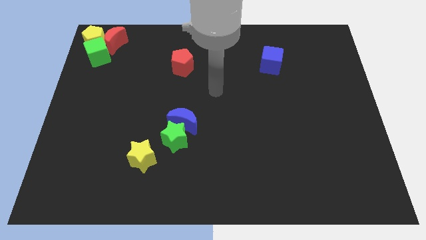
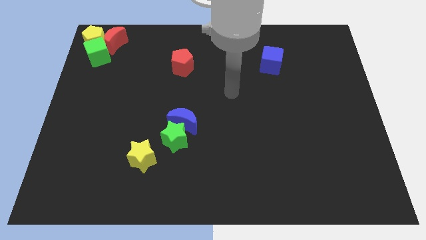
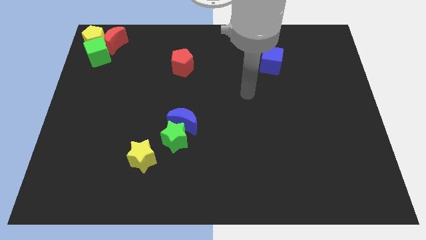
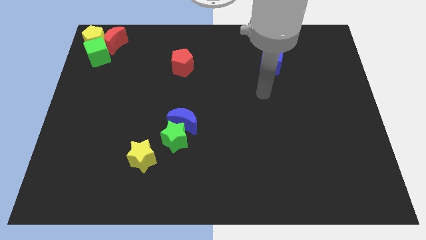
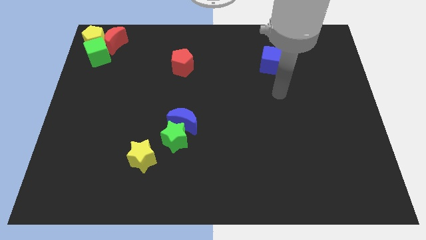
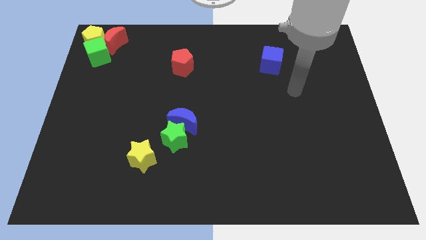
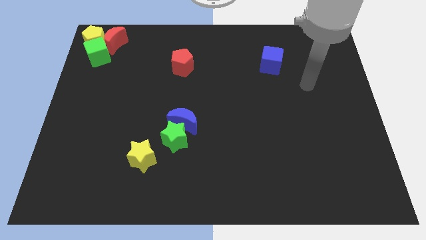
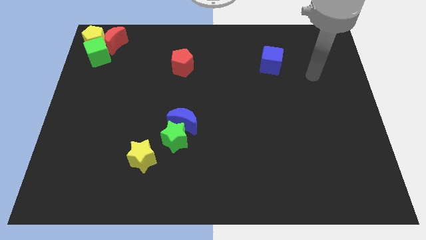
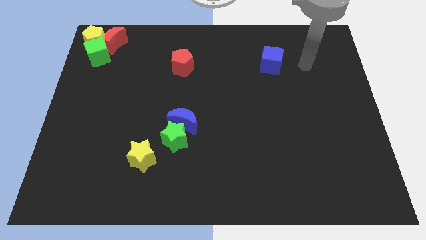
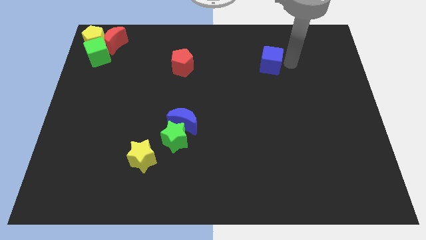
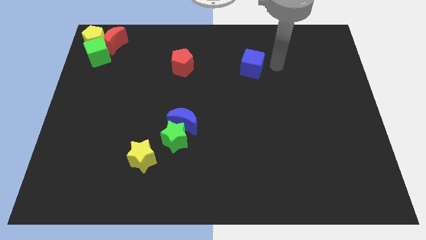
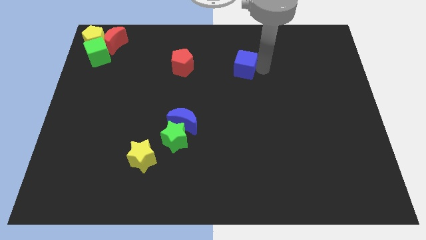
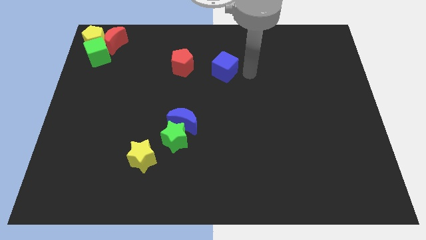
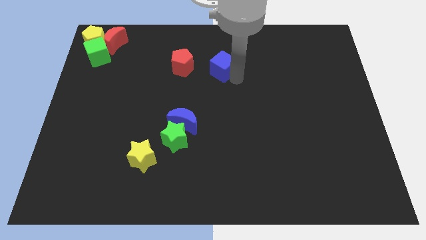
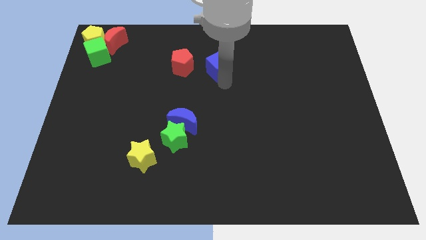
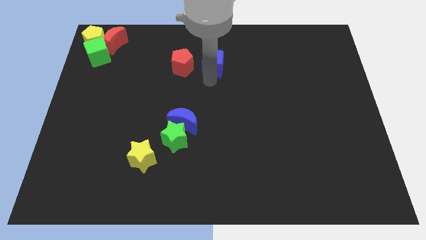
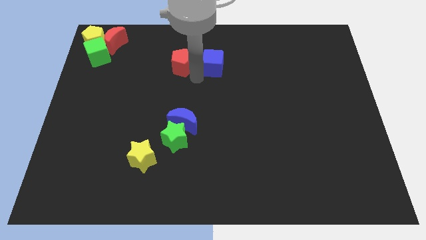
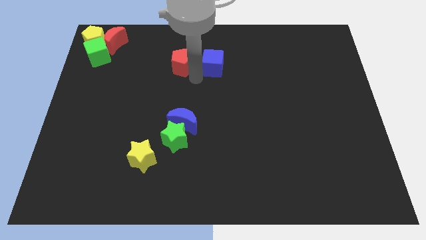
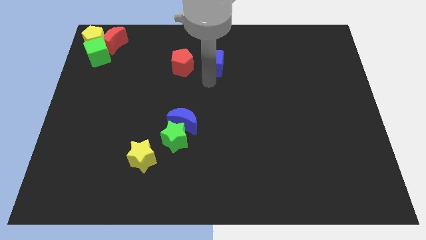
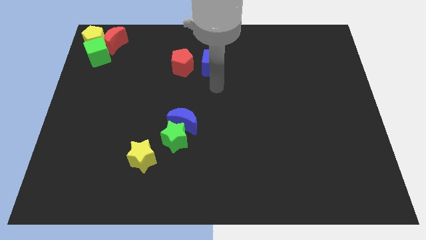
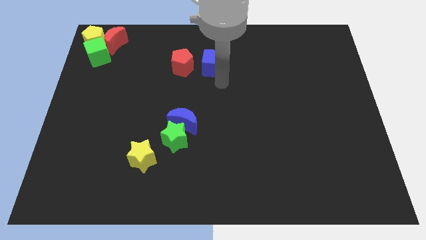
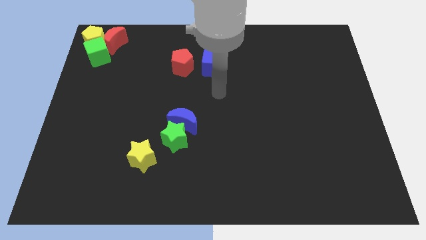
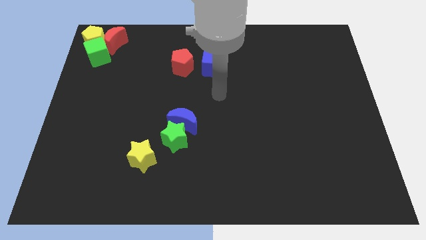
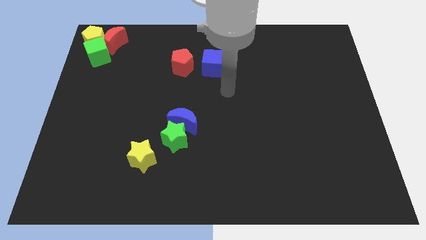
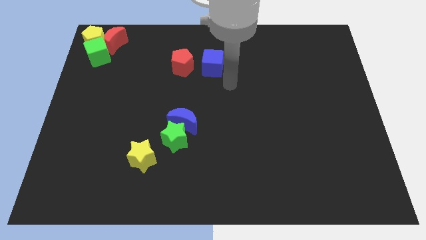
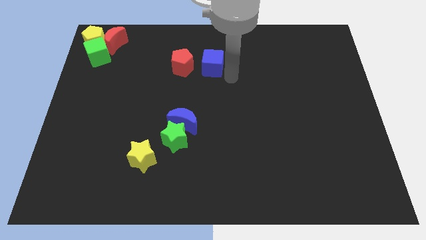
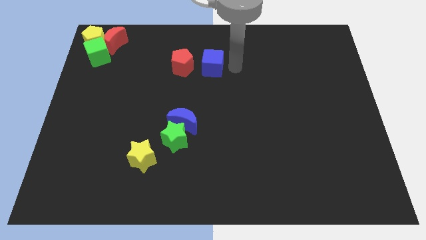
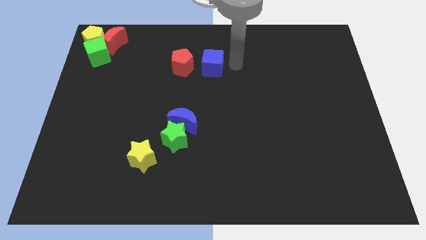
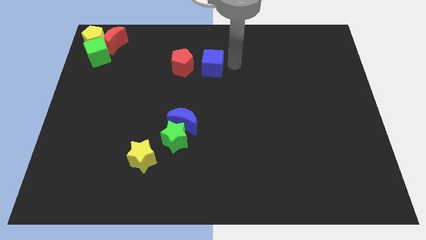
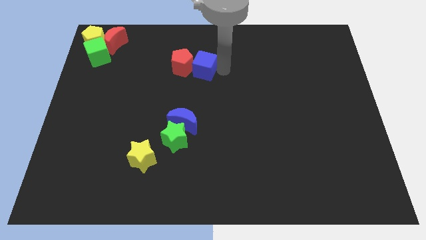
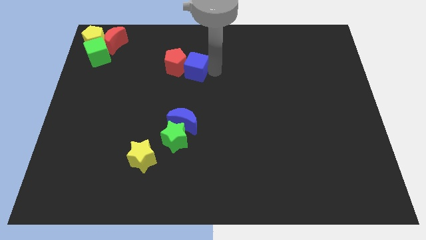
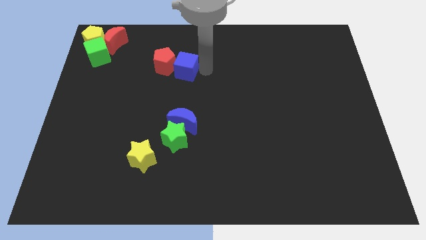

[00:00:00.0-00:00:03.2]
push the blue cube to the right of the red pentagon

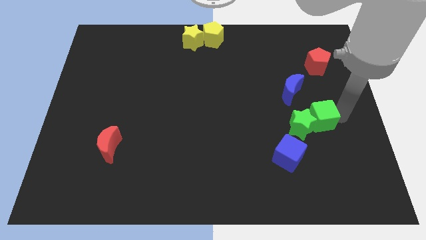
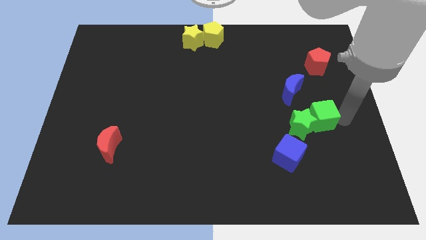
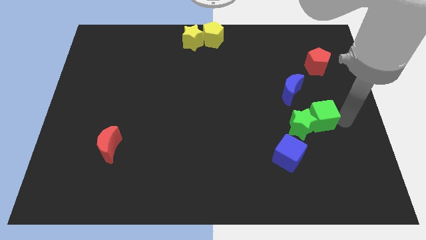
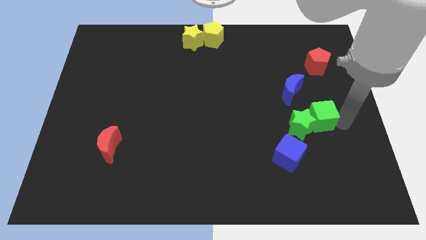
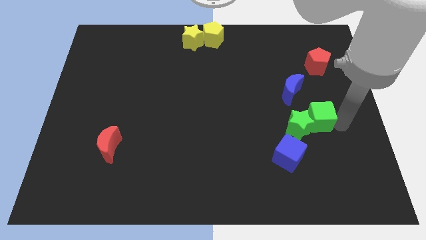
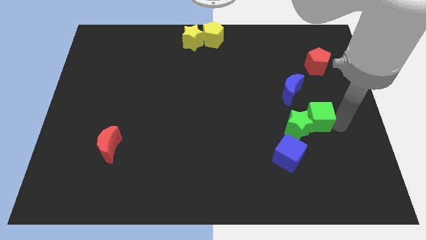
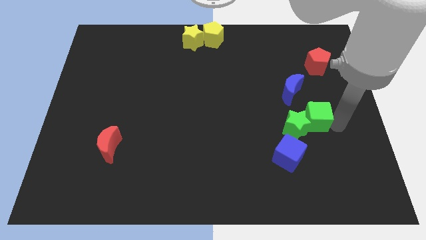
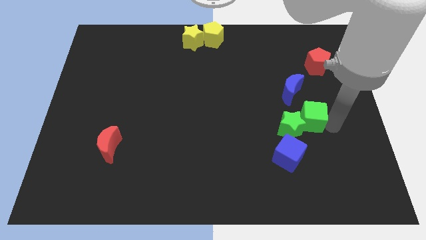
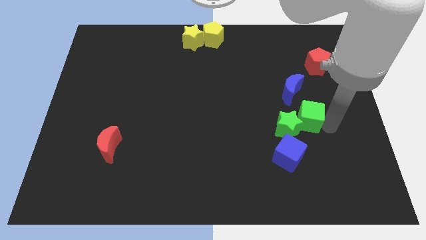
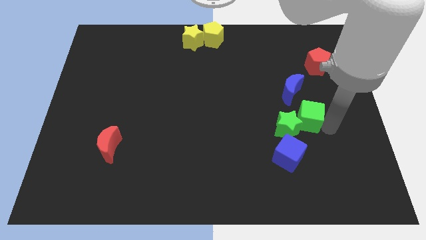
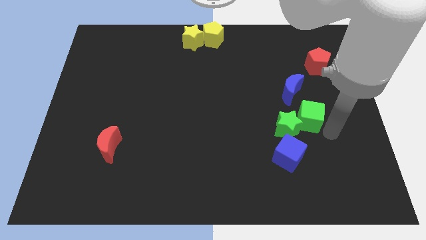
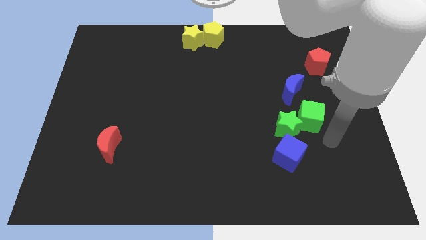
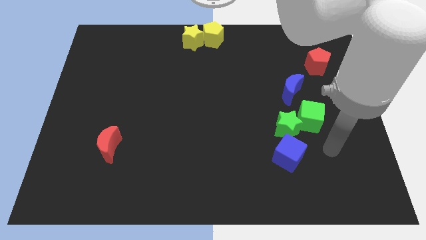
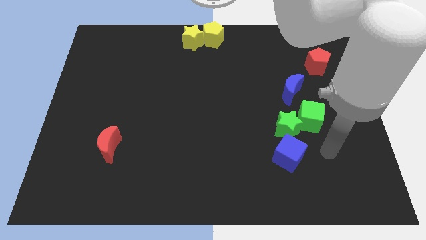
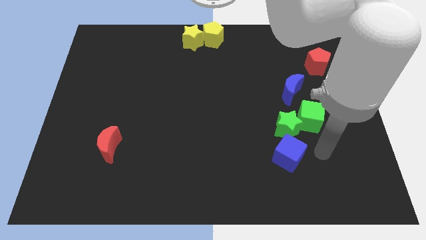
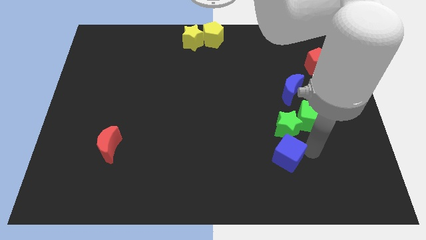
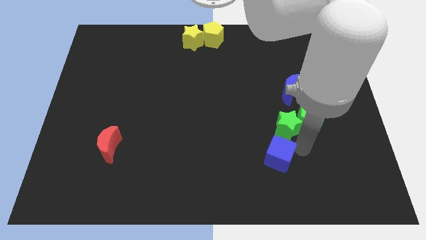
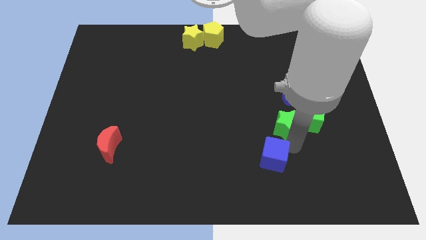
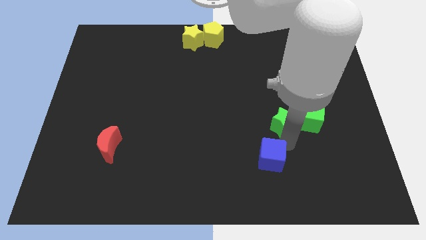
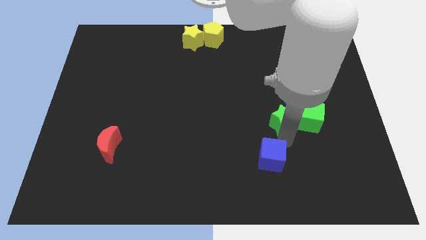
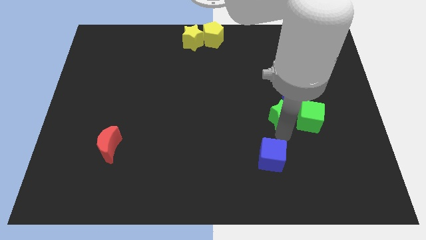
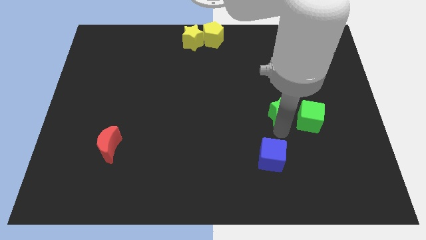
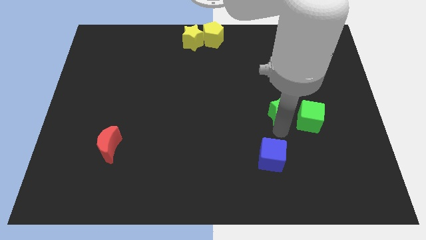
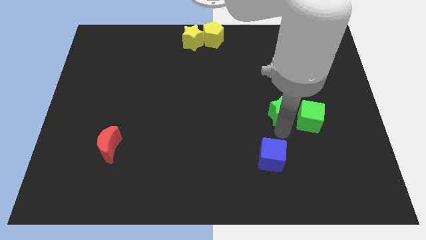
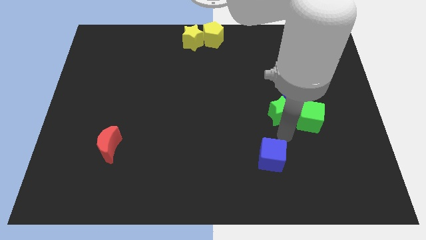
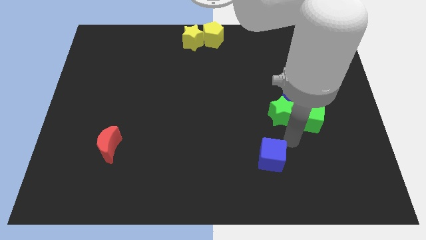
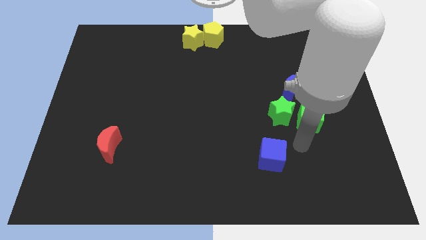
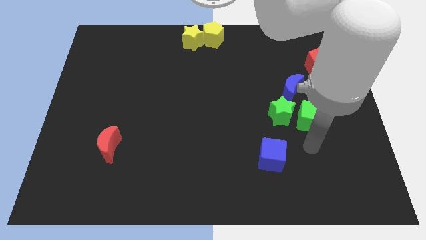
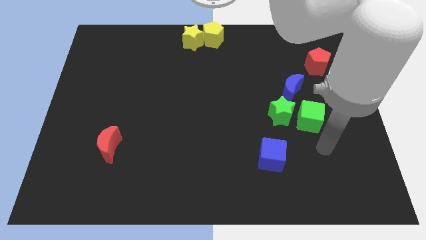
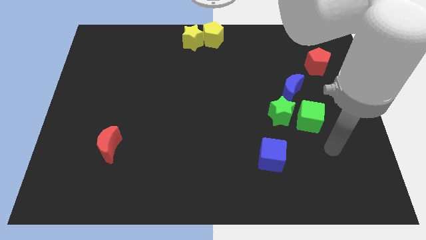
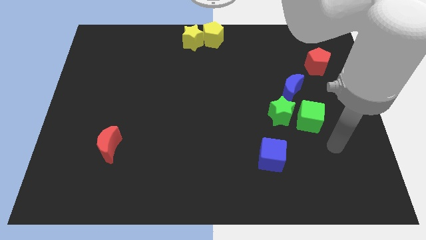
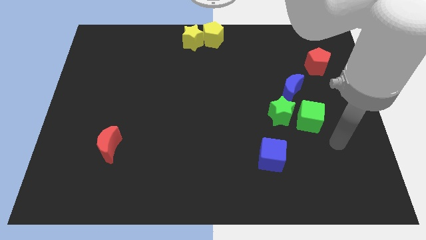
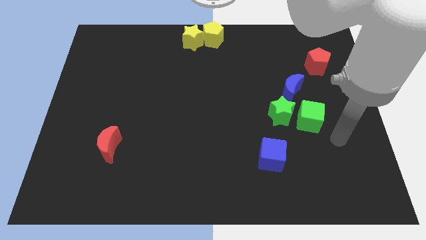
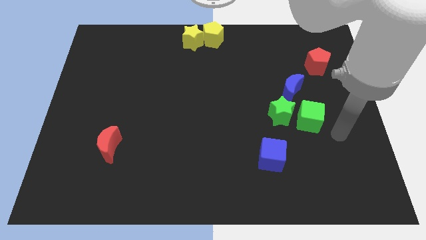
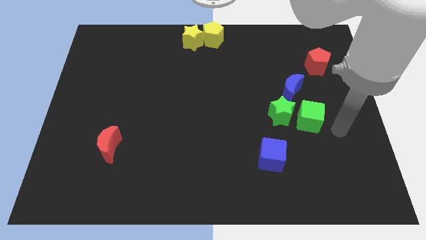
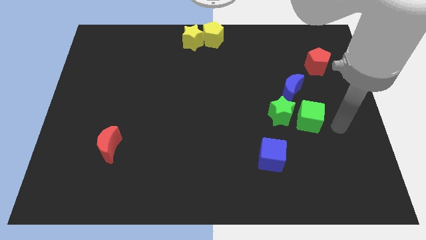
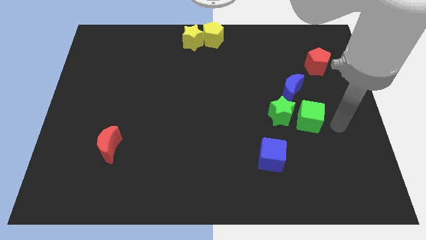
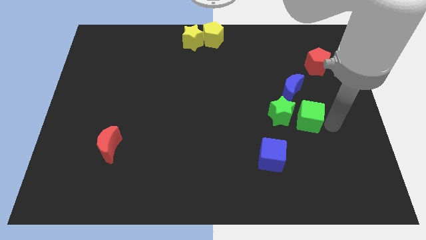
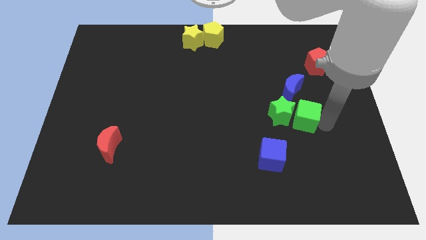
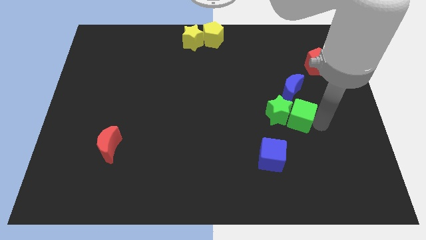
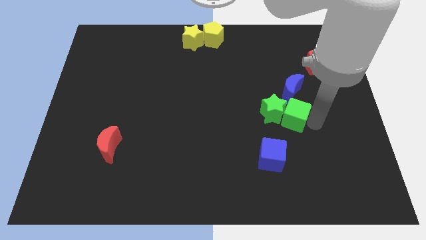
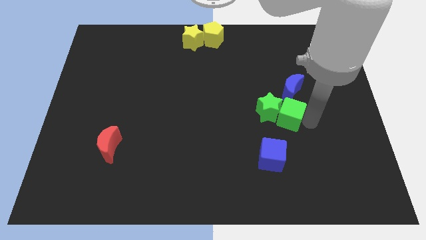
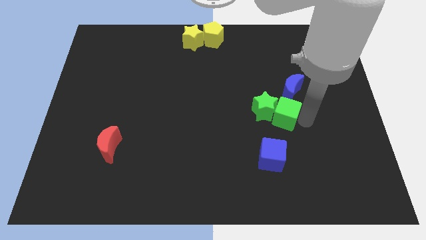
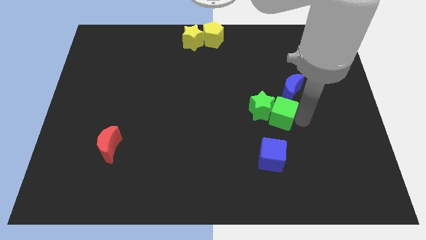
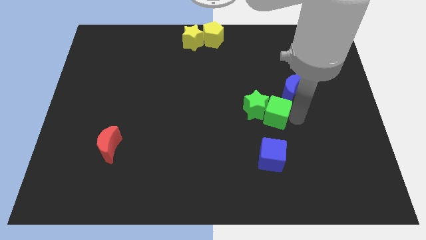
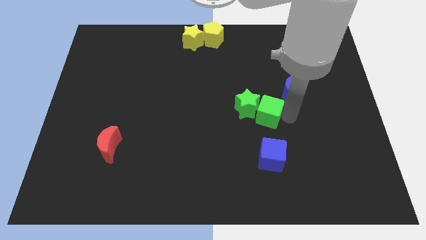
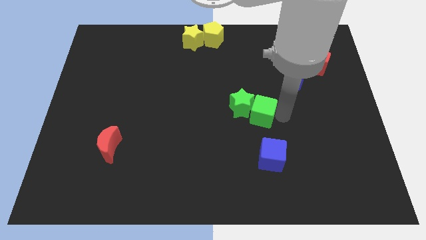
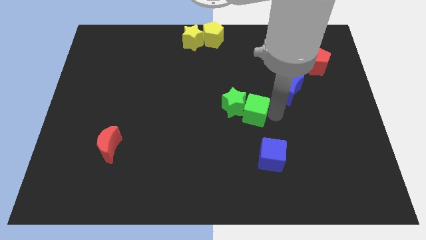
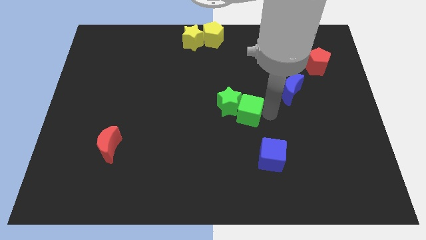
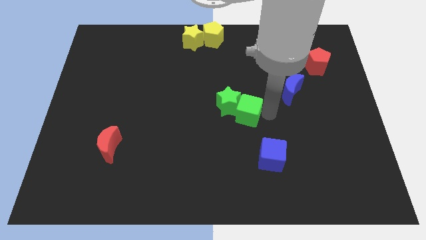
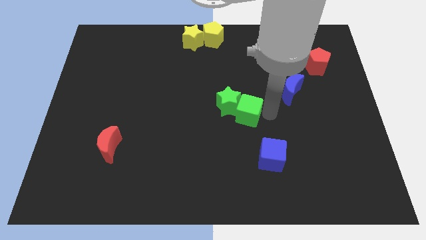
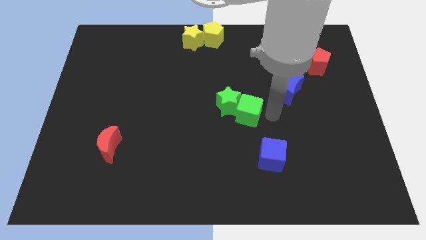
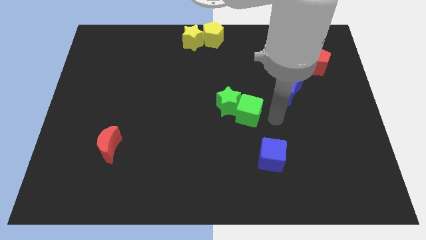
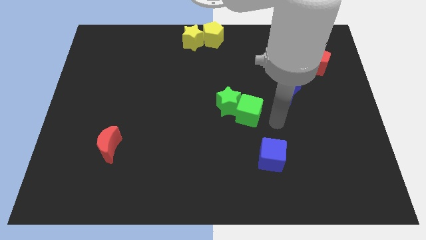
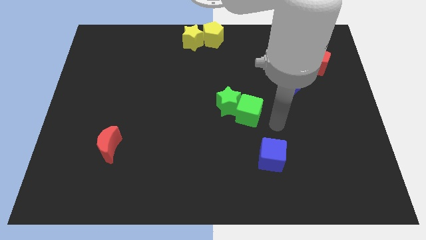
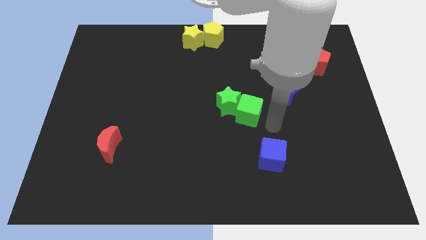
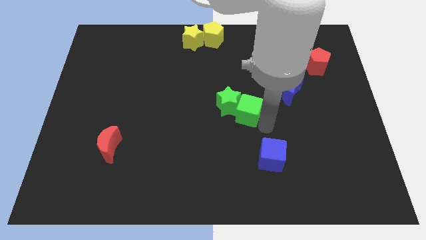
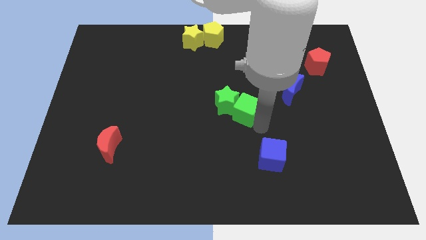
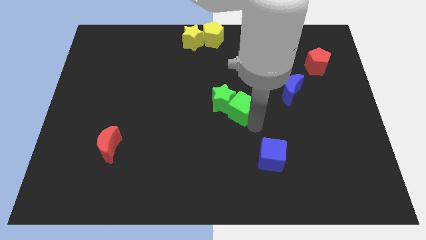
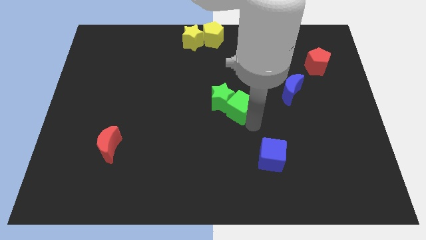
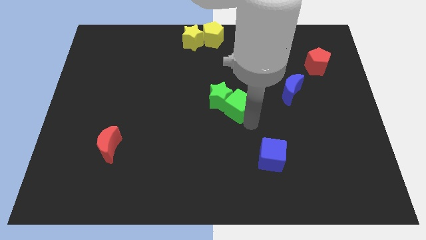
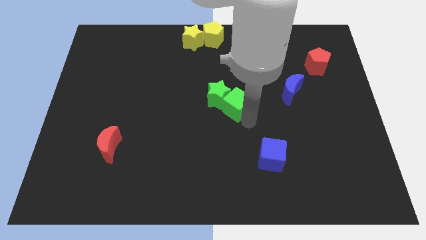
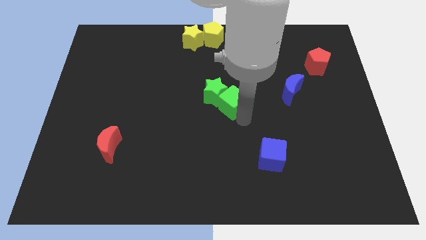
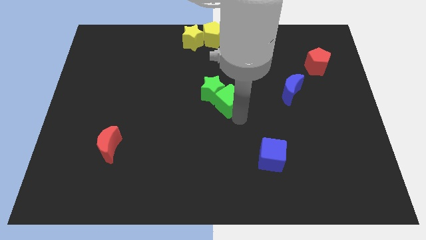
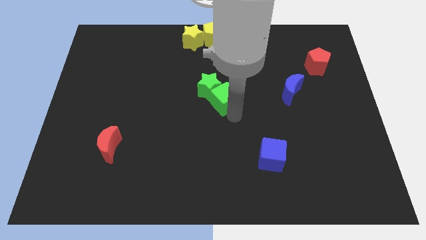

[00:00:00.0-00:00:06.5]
move the green cube along with the green star to the center of the board
